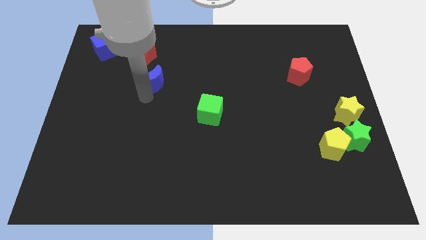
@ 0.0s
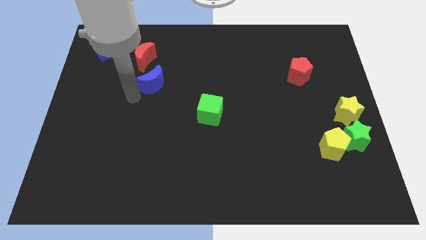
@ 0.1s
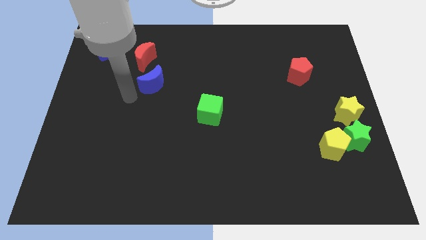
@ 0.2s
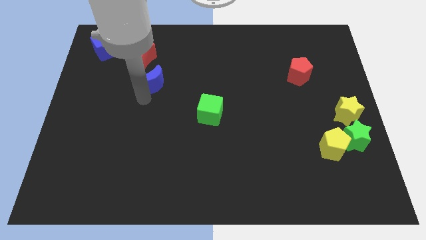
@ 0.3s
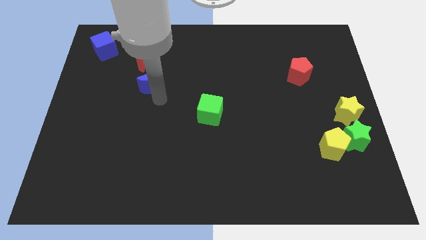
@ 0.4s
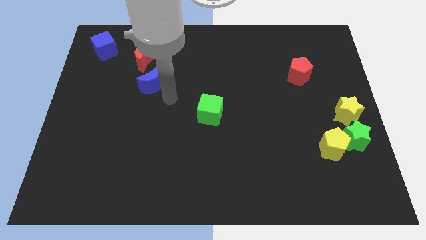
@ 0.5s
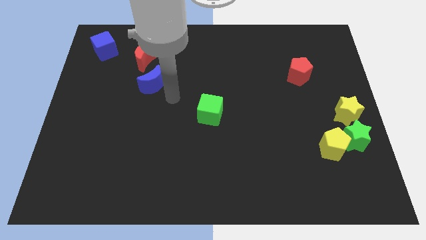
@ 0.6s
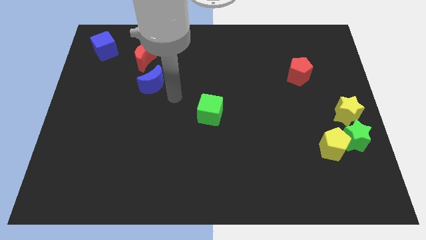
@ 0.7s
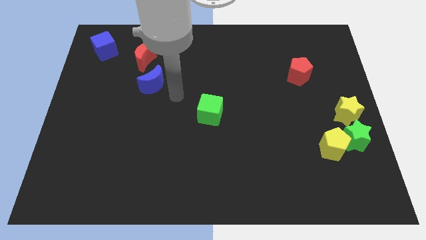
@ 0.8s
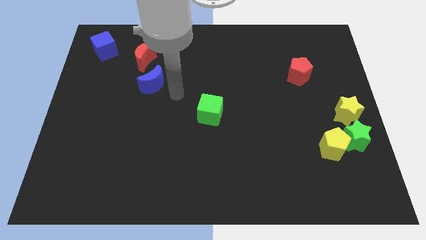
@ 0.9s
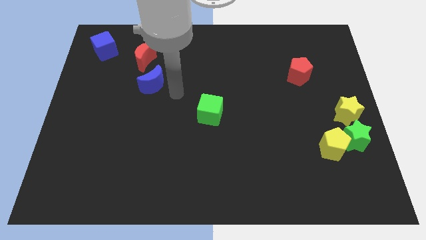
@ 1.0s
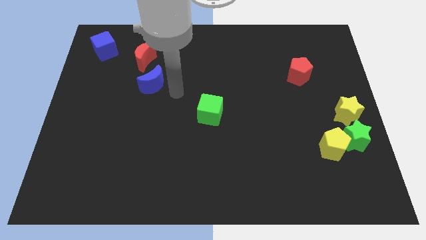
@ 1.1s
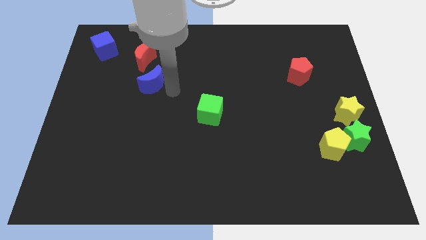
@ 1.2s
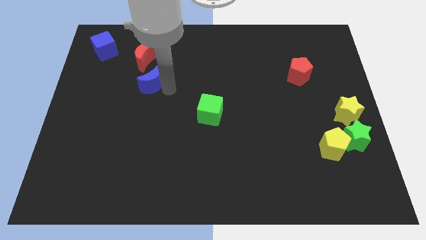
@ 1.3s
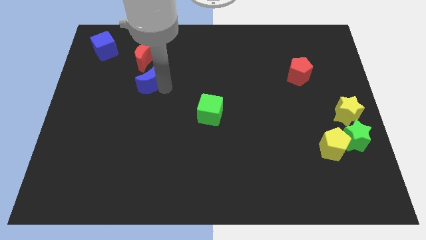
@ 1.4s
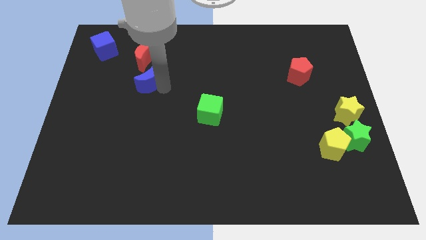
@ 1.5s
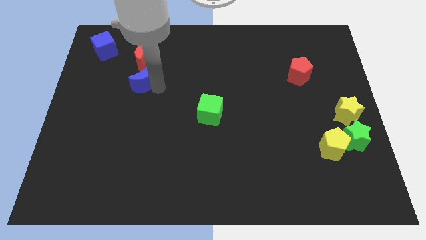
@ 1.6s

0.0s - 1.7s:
place the blue moon below the red moon

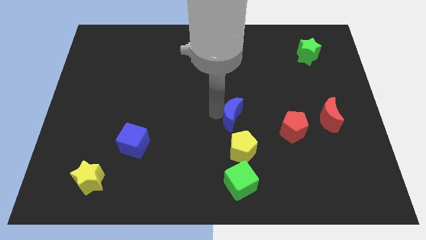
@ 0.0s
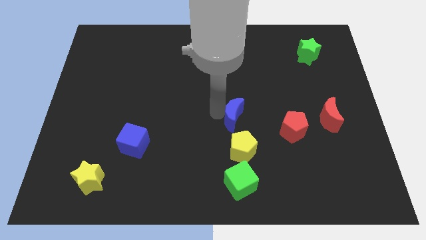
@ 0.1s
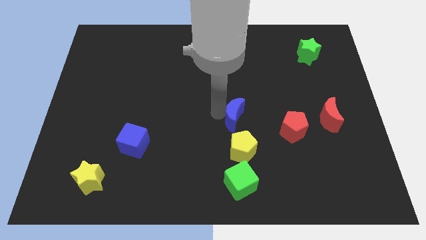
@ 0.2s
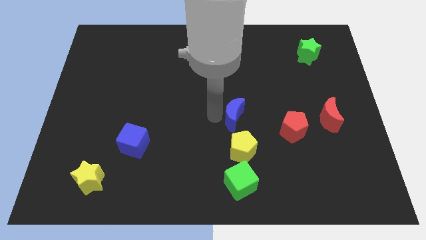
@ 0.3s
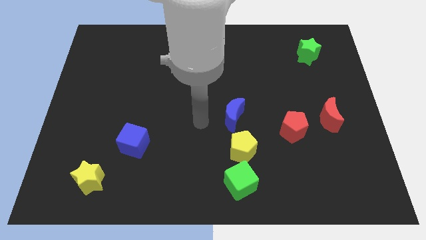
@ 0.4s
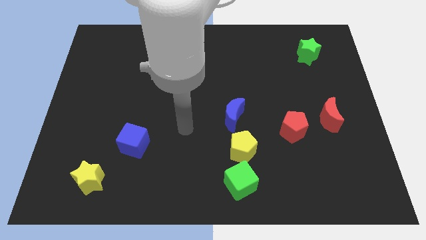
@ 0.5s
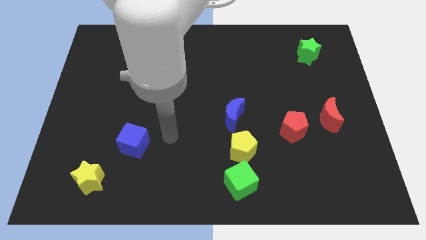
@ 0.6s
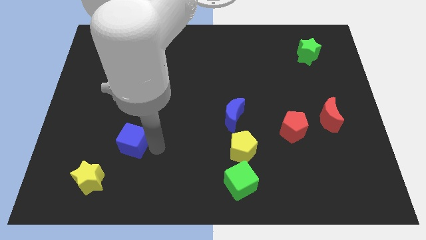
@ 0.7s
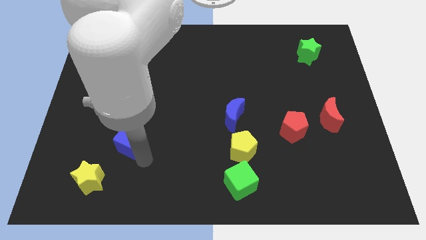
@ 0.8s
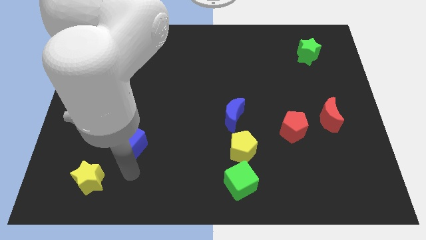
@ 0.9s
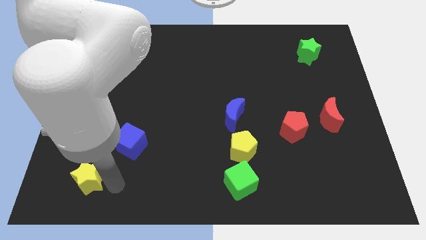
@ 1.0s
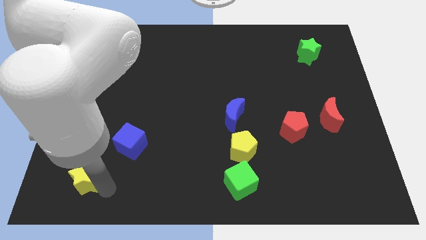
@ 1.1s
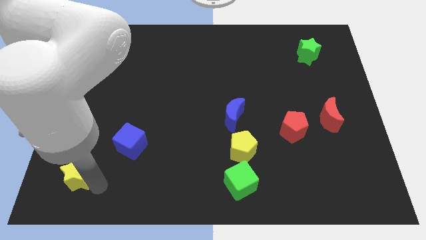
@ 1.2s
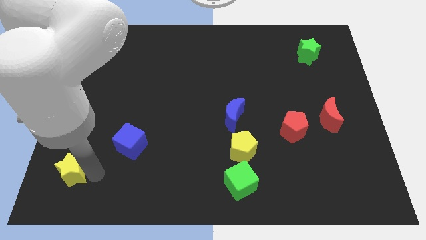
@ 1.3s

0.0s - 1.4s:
move yellow star slightly left

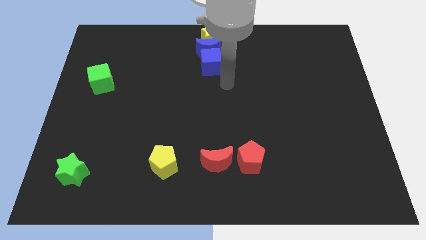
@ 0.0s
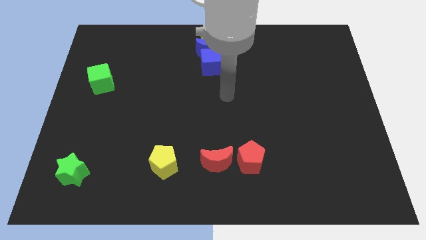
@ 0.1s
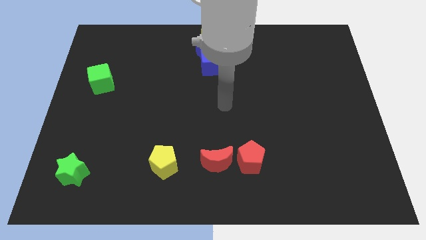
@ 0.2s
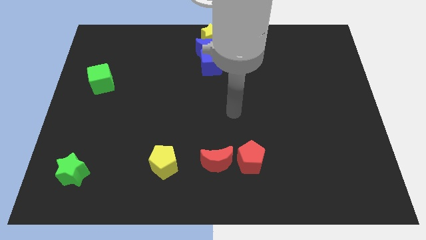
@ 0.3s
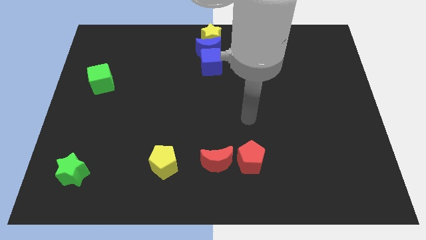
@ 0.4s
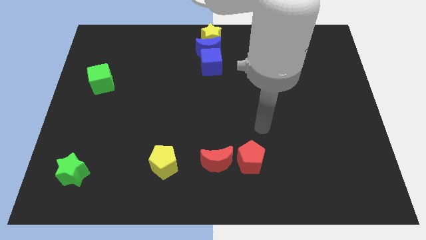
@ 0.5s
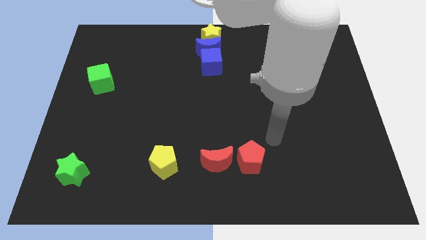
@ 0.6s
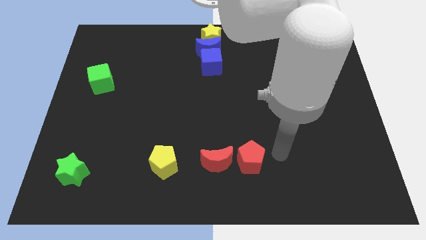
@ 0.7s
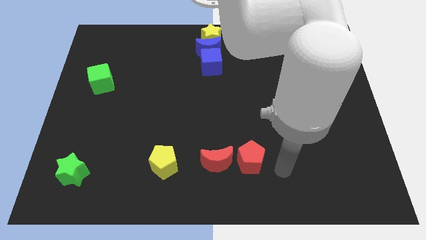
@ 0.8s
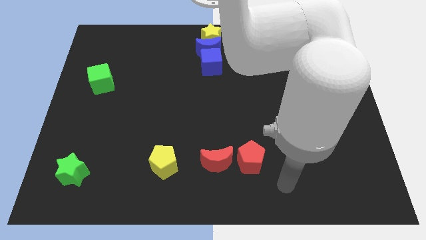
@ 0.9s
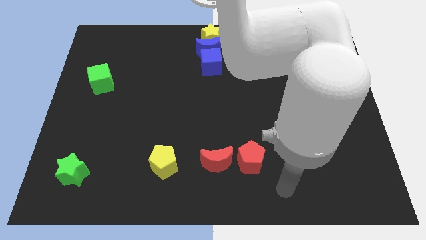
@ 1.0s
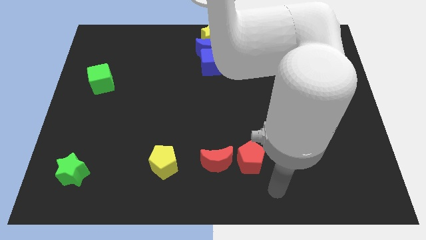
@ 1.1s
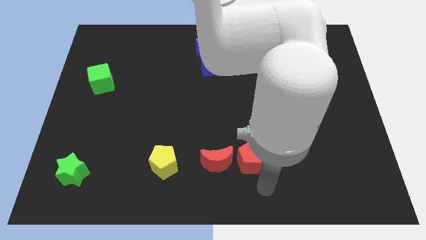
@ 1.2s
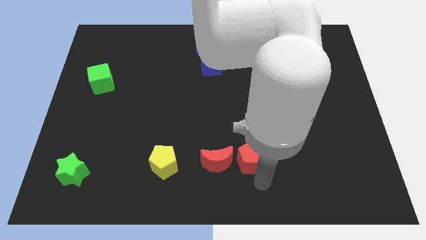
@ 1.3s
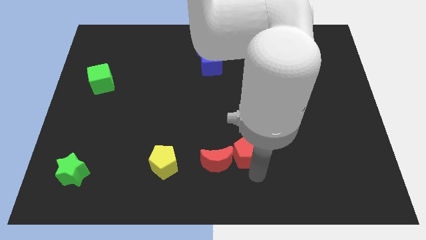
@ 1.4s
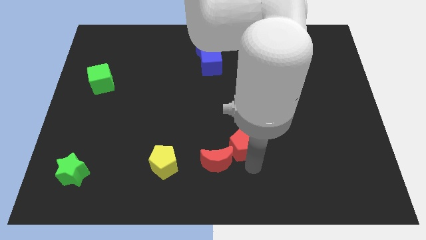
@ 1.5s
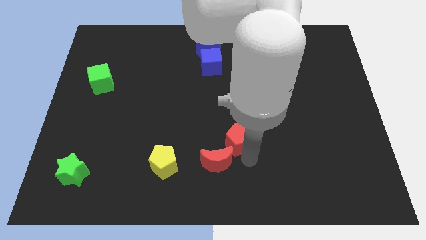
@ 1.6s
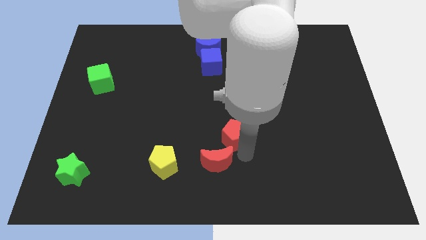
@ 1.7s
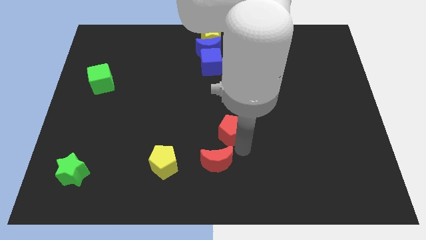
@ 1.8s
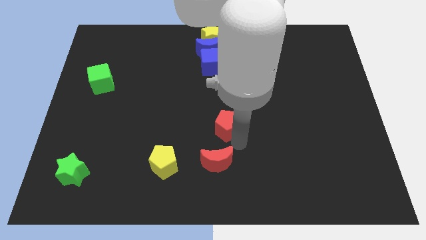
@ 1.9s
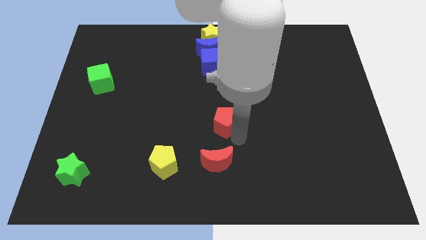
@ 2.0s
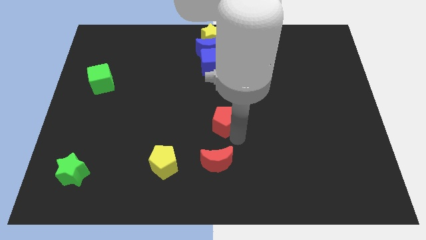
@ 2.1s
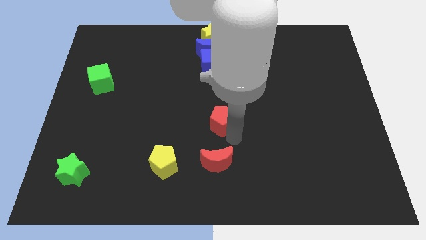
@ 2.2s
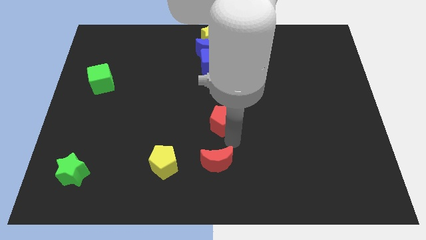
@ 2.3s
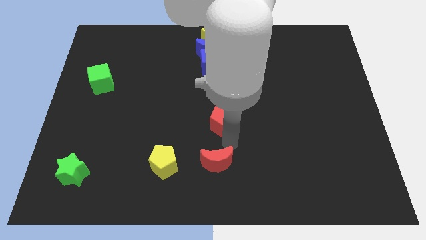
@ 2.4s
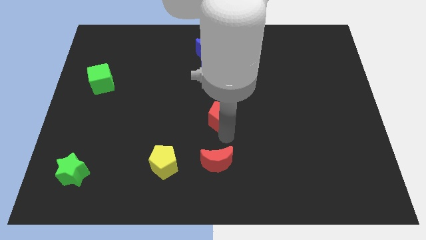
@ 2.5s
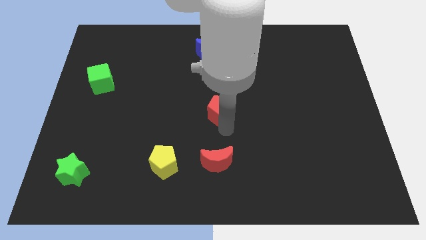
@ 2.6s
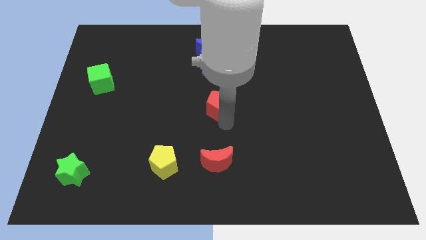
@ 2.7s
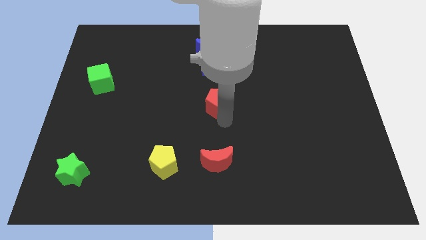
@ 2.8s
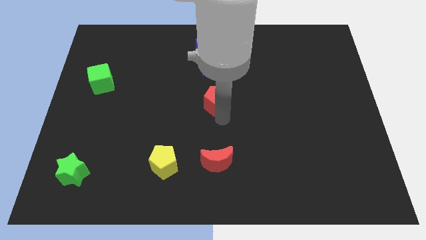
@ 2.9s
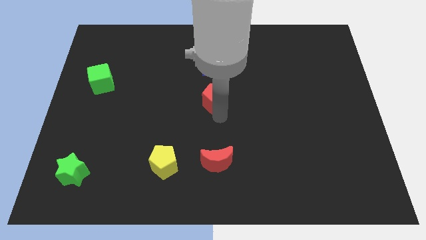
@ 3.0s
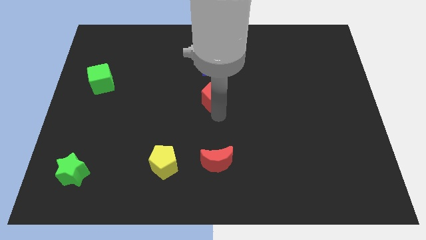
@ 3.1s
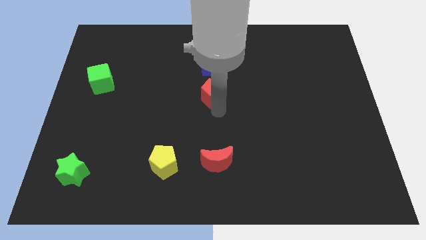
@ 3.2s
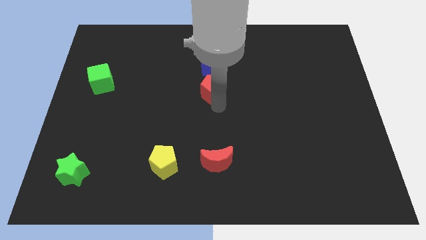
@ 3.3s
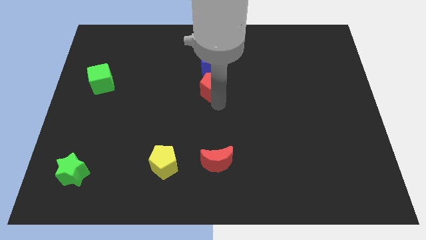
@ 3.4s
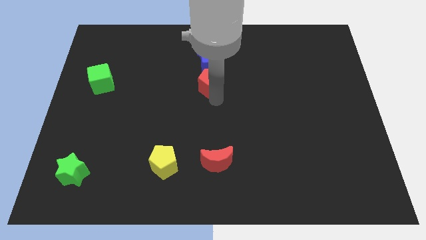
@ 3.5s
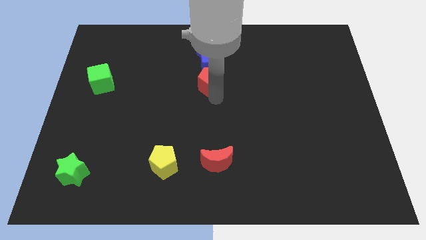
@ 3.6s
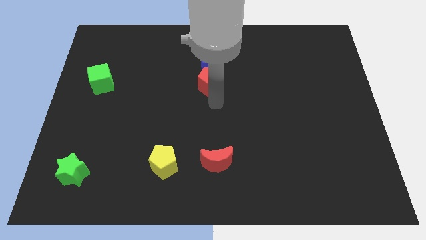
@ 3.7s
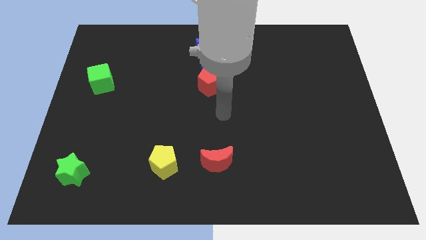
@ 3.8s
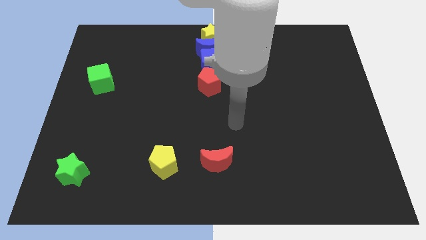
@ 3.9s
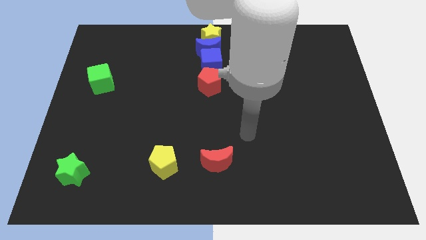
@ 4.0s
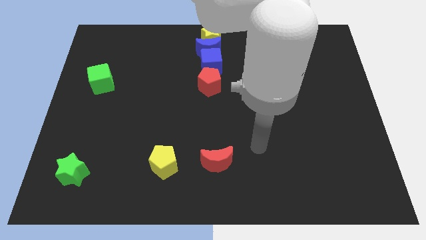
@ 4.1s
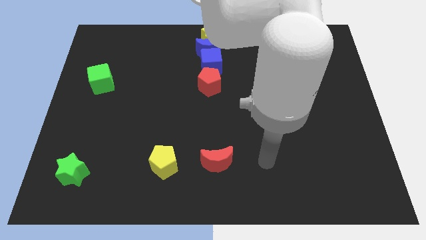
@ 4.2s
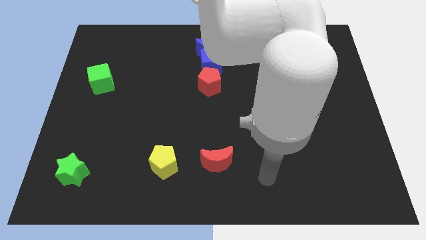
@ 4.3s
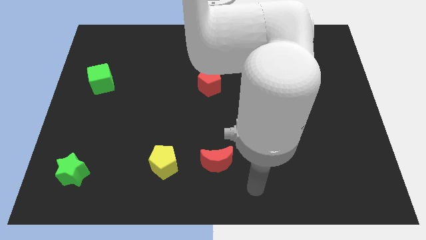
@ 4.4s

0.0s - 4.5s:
place the red pentagon right to the green cube

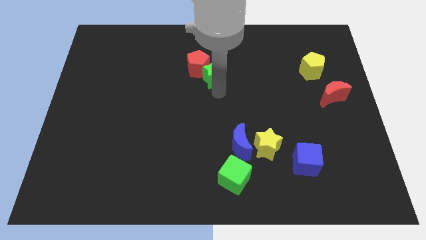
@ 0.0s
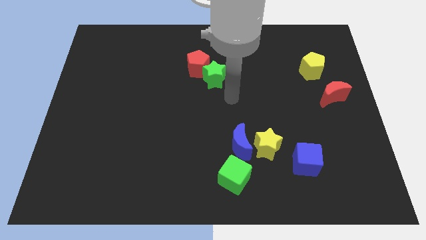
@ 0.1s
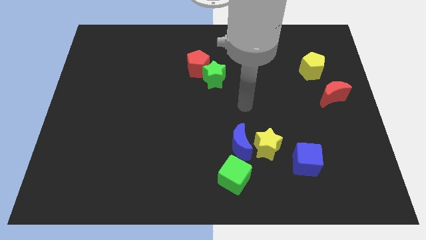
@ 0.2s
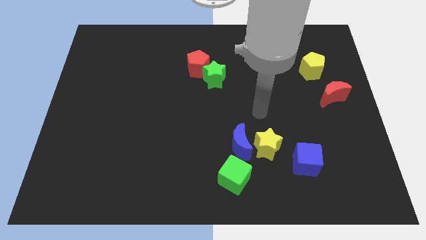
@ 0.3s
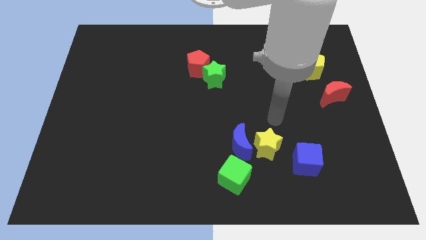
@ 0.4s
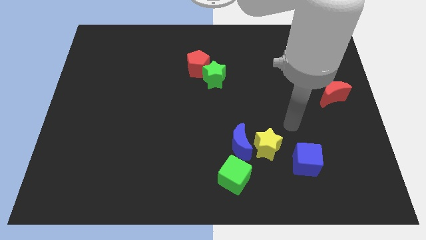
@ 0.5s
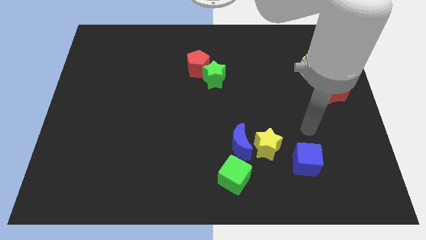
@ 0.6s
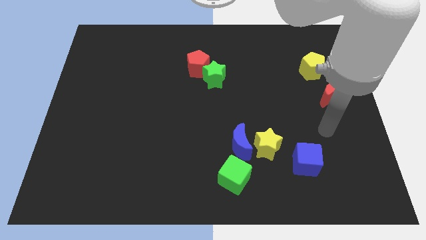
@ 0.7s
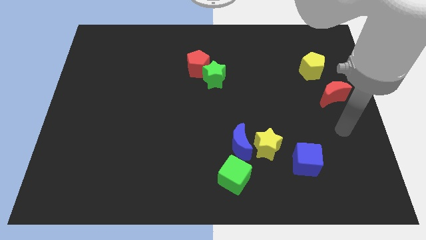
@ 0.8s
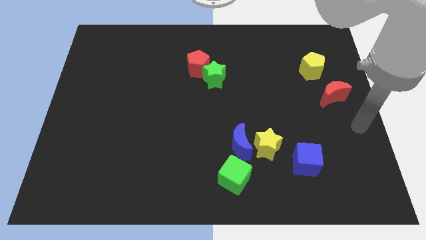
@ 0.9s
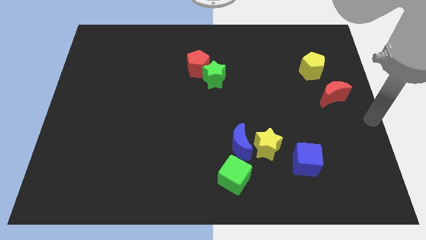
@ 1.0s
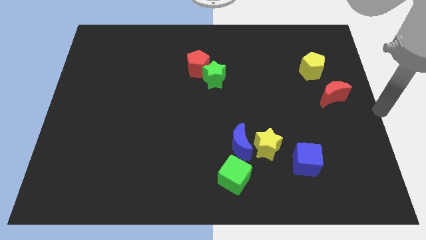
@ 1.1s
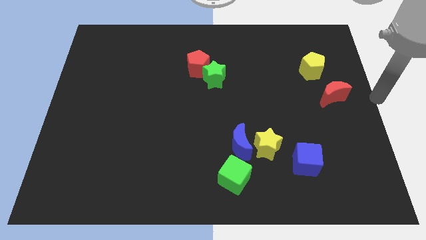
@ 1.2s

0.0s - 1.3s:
move the arm away from the green star

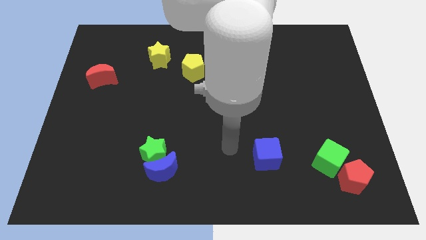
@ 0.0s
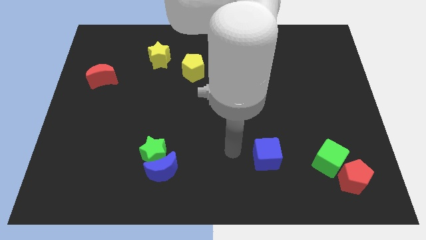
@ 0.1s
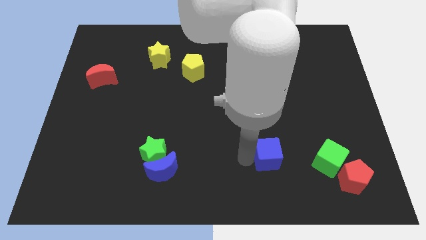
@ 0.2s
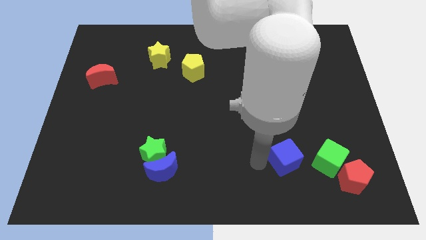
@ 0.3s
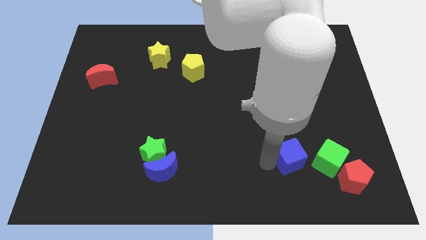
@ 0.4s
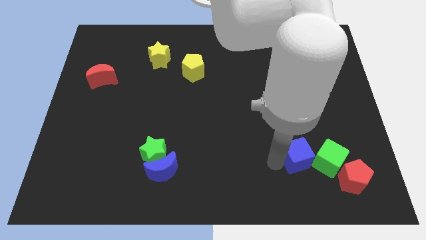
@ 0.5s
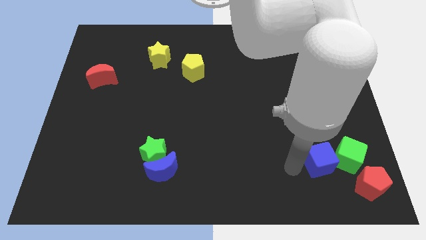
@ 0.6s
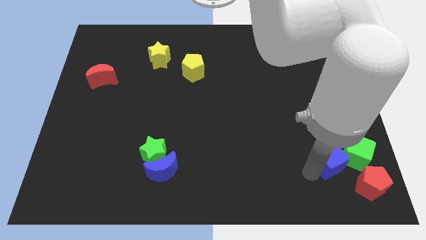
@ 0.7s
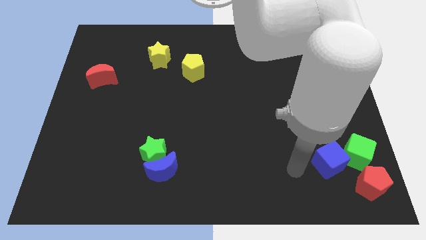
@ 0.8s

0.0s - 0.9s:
move the blue cube into the green cube
